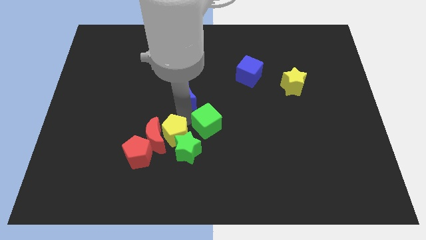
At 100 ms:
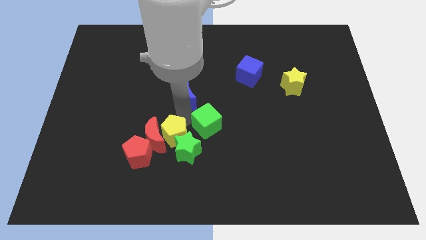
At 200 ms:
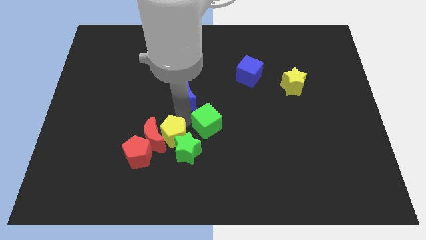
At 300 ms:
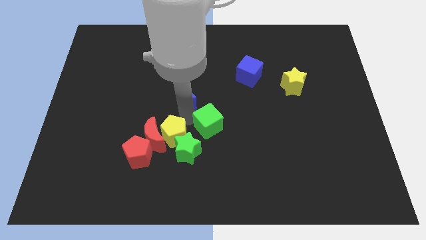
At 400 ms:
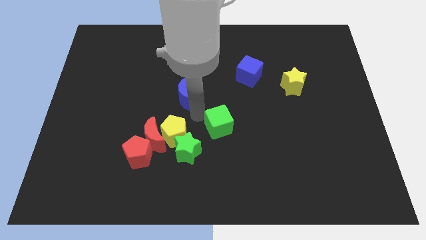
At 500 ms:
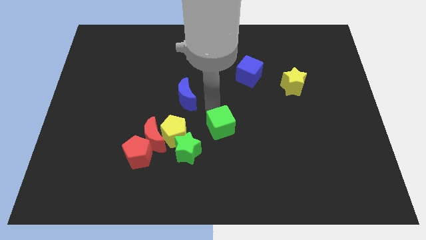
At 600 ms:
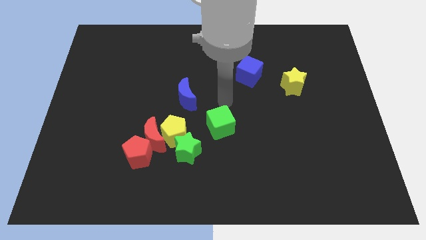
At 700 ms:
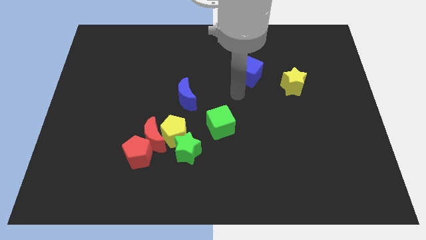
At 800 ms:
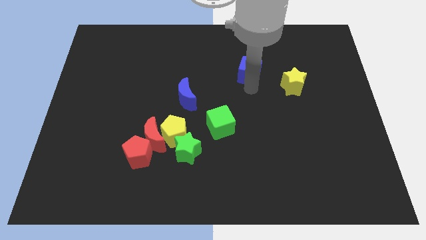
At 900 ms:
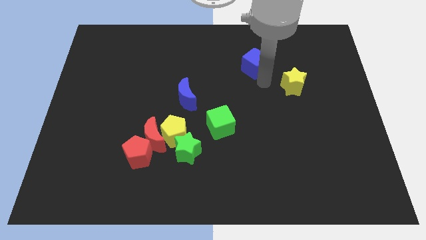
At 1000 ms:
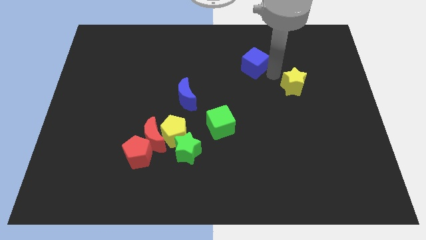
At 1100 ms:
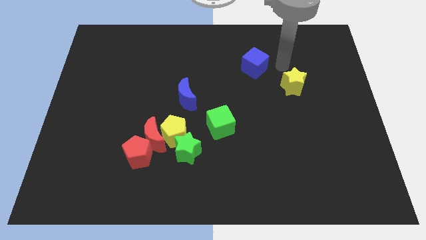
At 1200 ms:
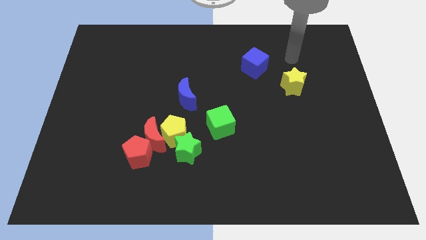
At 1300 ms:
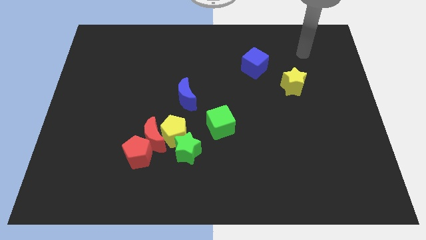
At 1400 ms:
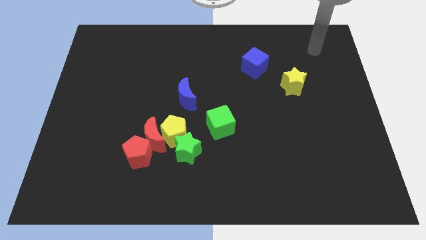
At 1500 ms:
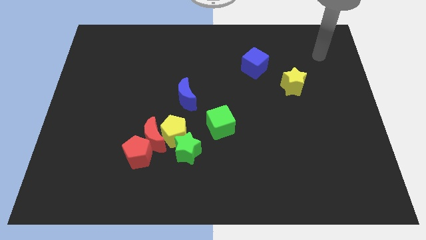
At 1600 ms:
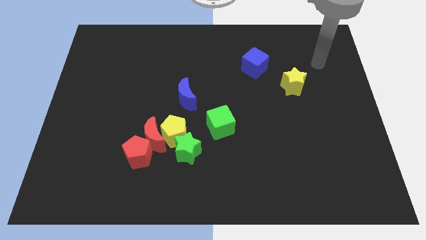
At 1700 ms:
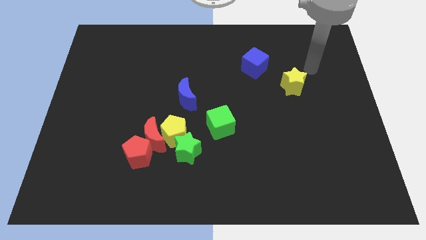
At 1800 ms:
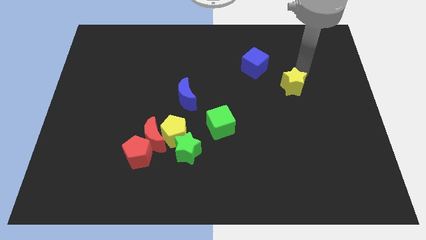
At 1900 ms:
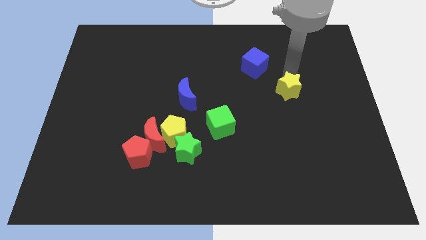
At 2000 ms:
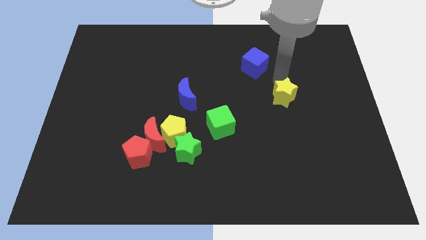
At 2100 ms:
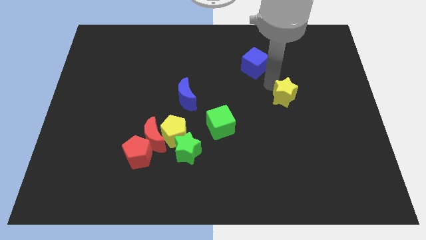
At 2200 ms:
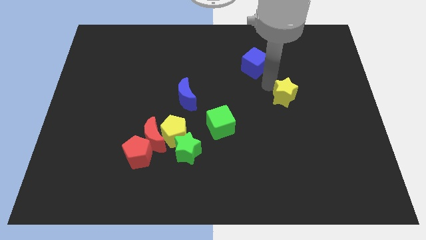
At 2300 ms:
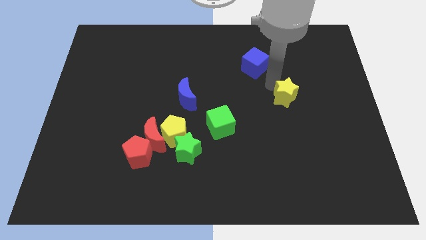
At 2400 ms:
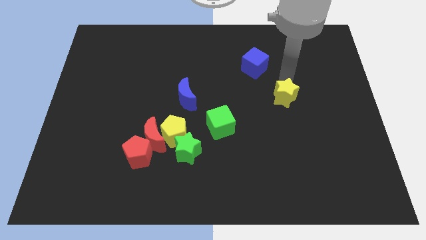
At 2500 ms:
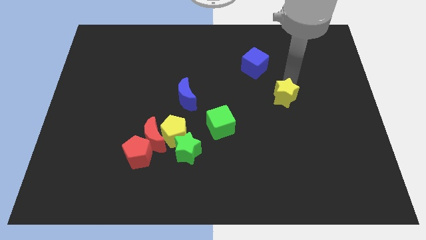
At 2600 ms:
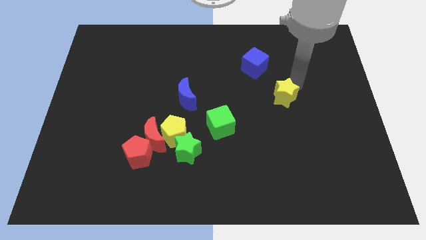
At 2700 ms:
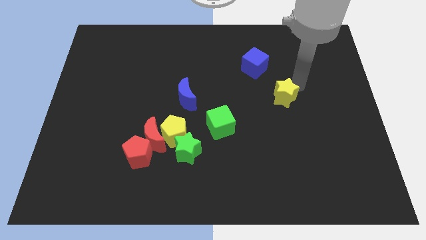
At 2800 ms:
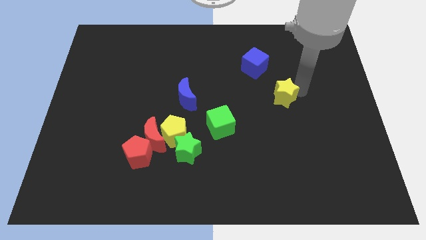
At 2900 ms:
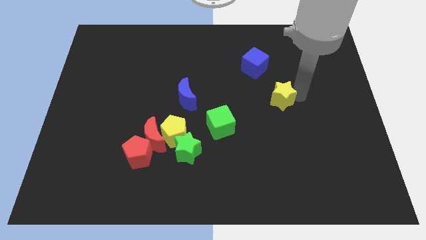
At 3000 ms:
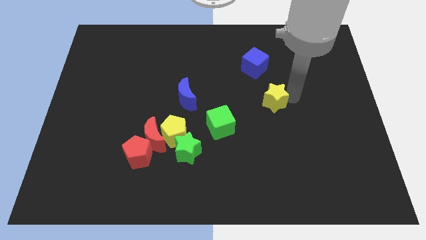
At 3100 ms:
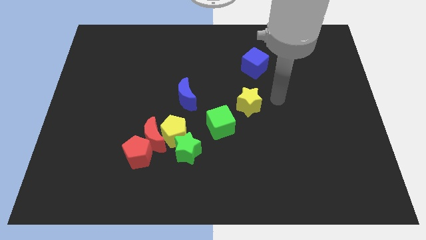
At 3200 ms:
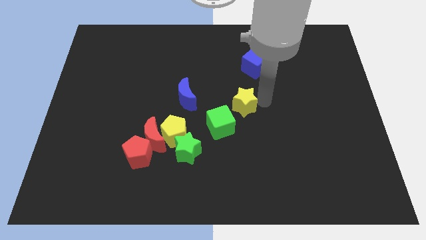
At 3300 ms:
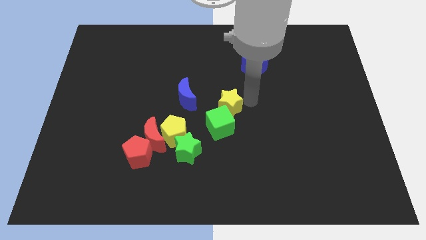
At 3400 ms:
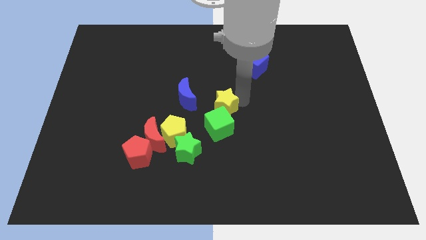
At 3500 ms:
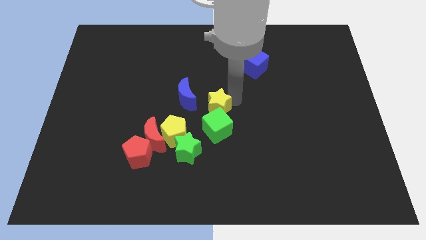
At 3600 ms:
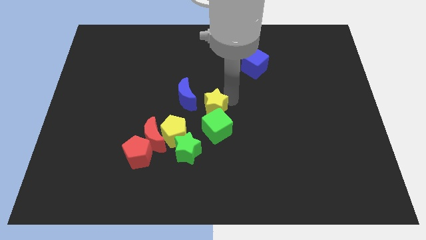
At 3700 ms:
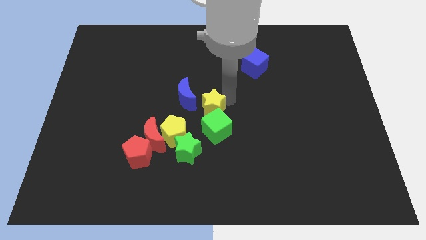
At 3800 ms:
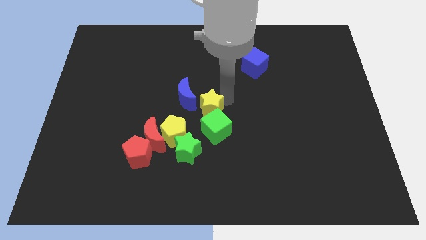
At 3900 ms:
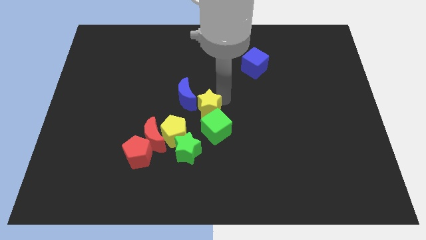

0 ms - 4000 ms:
move your arm away from the yellow pentagon

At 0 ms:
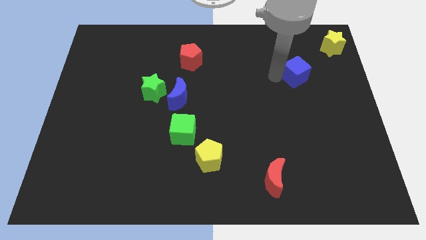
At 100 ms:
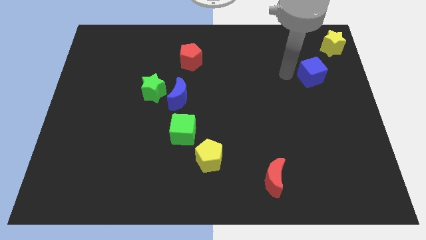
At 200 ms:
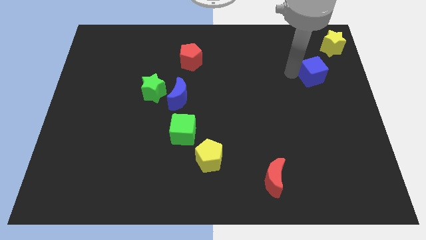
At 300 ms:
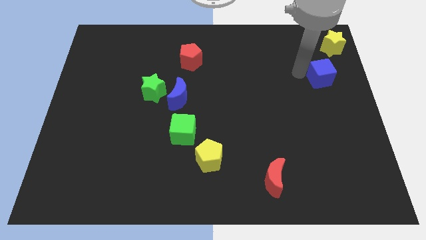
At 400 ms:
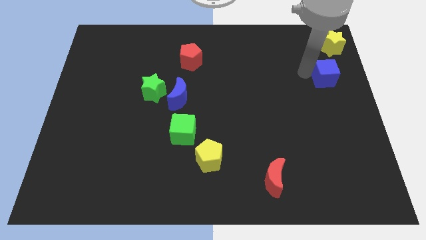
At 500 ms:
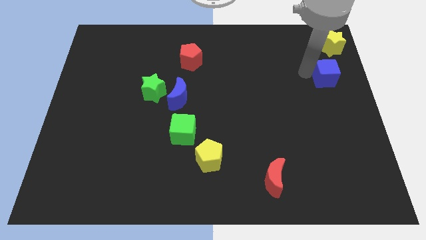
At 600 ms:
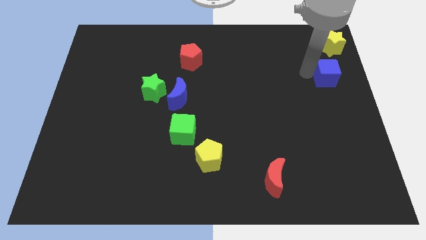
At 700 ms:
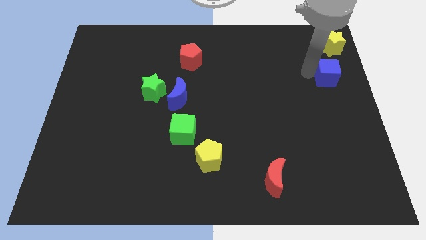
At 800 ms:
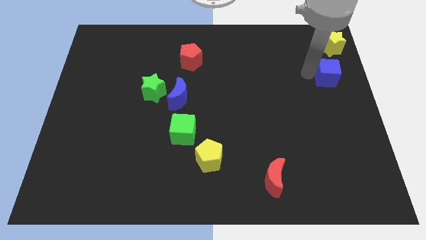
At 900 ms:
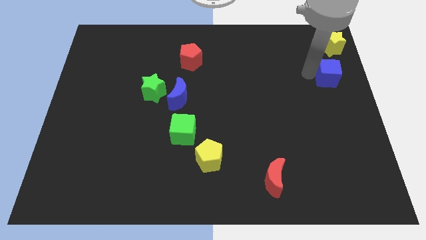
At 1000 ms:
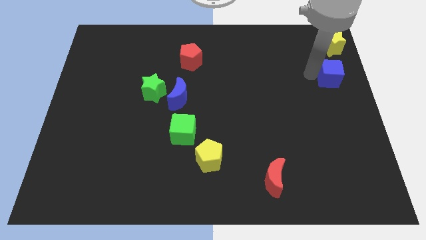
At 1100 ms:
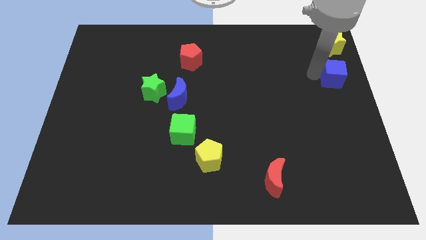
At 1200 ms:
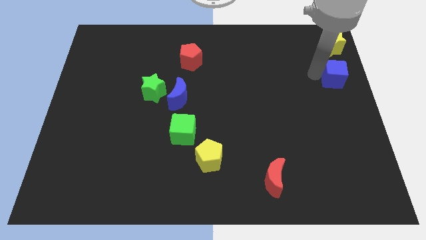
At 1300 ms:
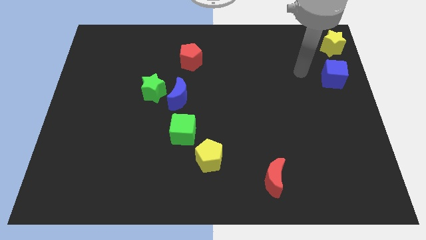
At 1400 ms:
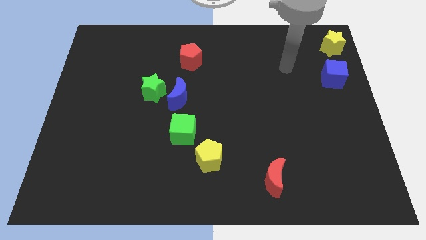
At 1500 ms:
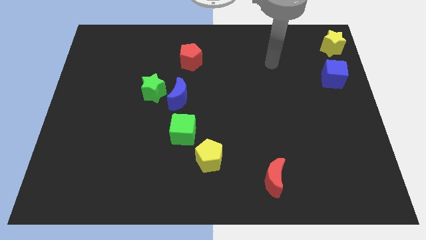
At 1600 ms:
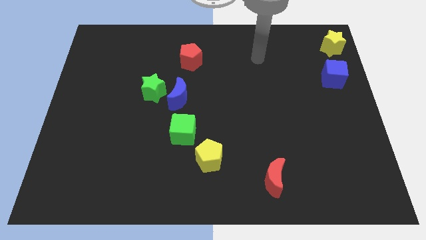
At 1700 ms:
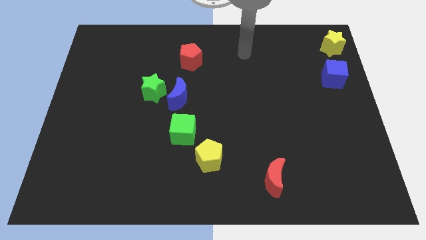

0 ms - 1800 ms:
place the blue cube below the yellow star

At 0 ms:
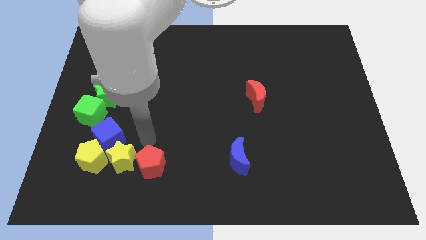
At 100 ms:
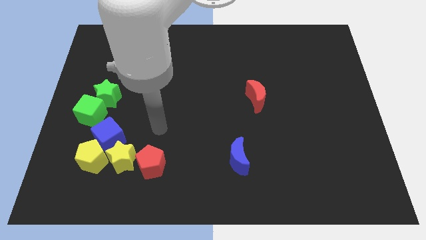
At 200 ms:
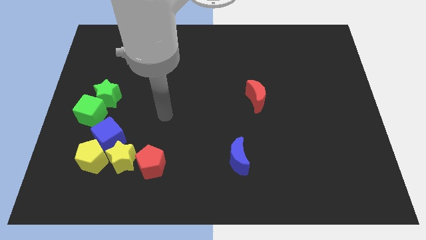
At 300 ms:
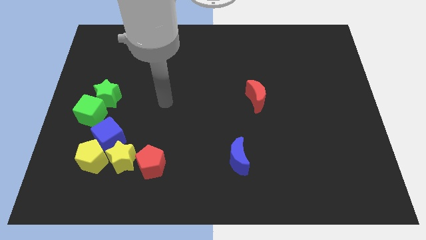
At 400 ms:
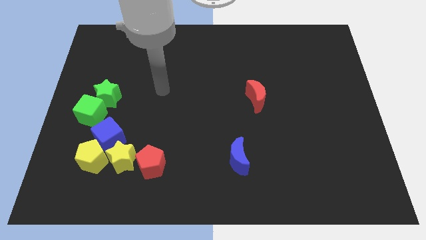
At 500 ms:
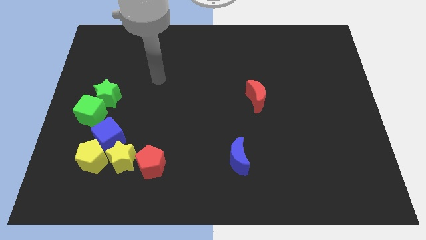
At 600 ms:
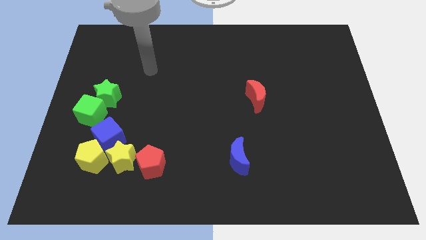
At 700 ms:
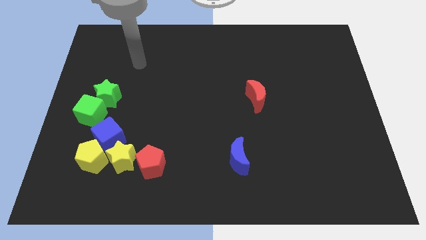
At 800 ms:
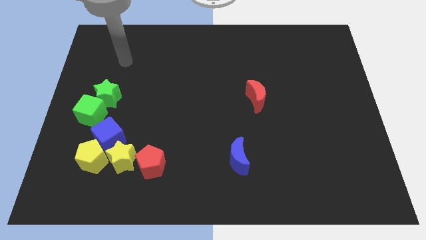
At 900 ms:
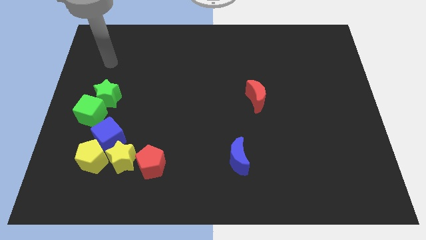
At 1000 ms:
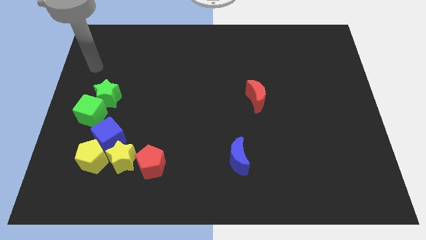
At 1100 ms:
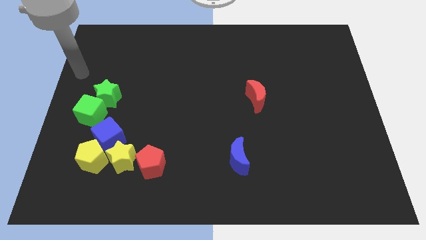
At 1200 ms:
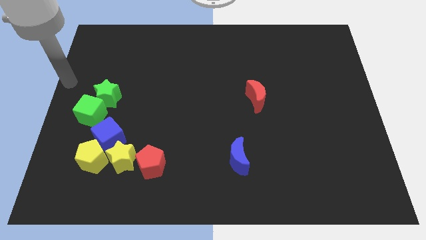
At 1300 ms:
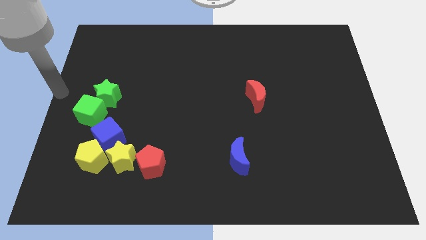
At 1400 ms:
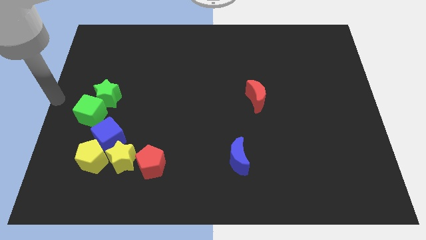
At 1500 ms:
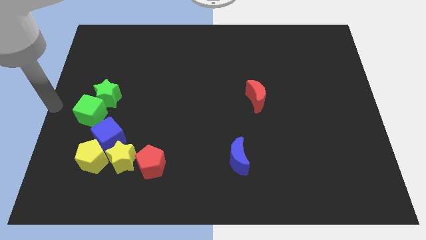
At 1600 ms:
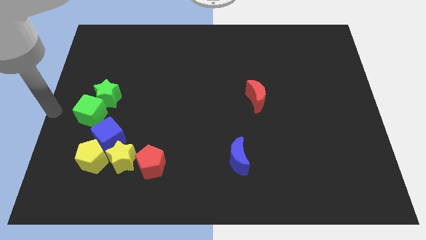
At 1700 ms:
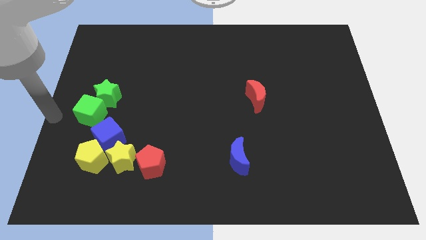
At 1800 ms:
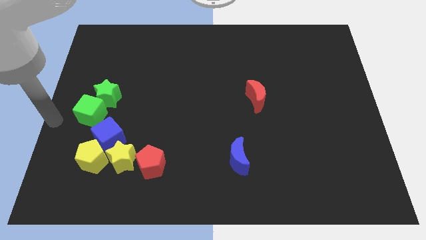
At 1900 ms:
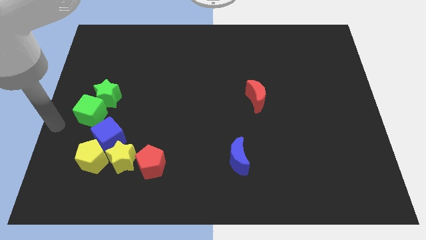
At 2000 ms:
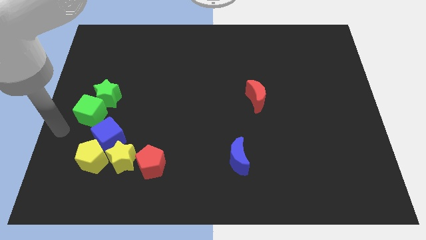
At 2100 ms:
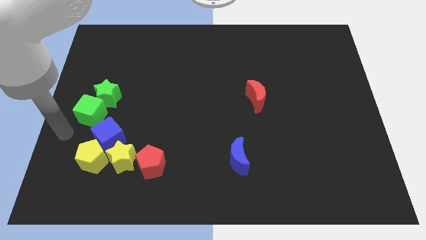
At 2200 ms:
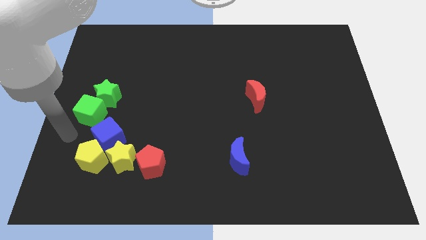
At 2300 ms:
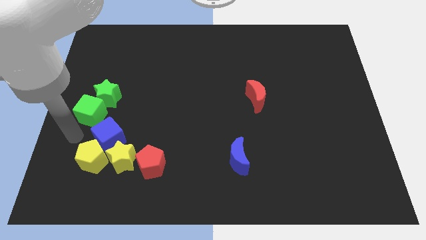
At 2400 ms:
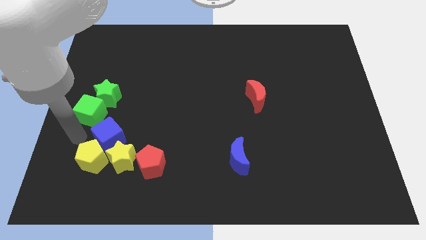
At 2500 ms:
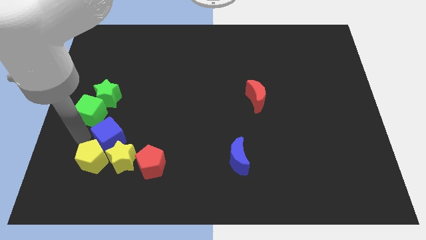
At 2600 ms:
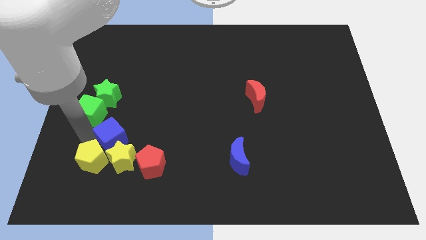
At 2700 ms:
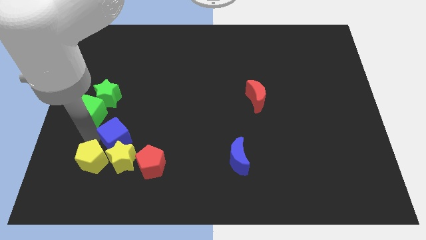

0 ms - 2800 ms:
place your arm to the left of blue cube

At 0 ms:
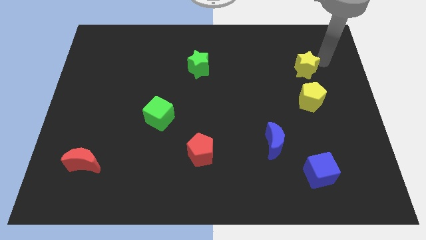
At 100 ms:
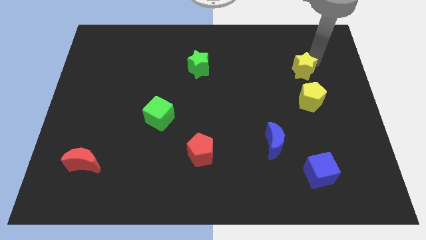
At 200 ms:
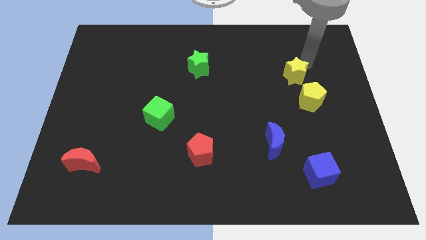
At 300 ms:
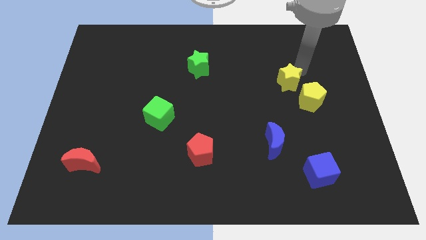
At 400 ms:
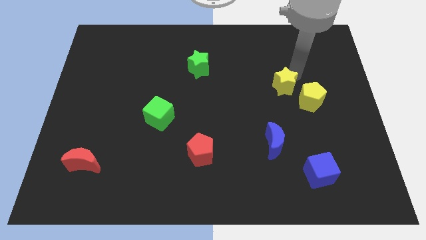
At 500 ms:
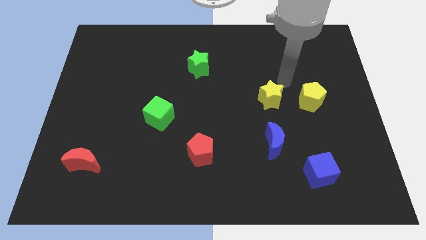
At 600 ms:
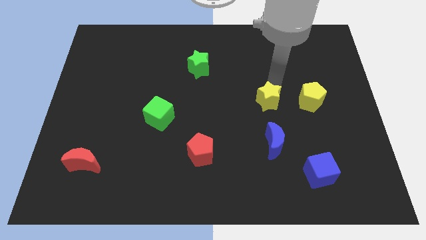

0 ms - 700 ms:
move yellow star left beside the yellow pentagon
